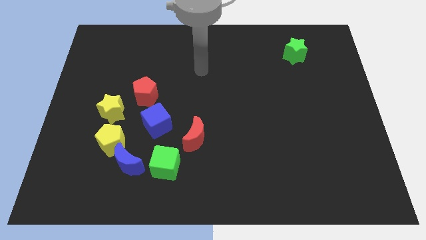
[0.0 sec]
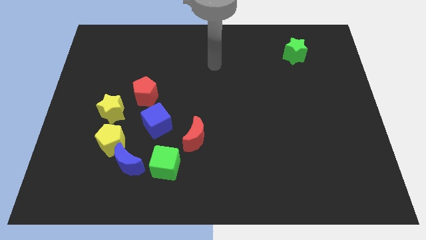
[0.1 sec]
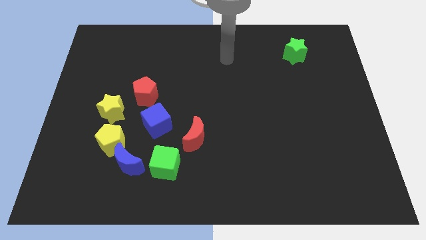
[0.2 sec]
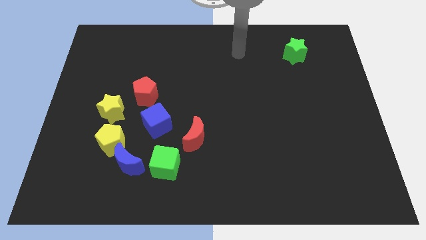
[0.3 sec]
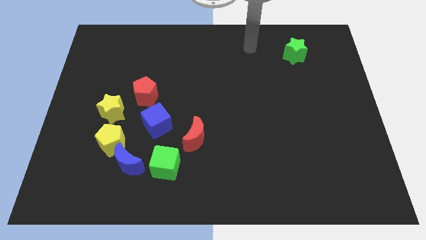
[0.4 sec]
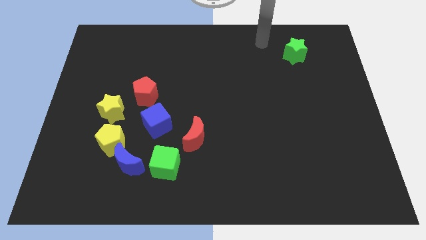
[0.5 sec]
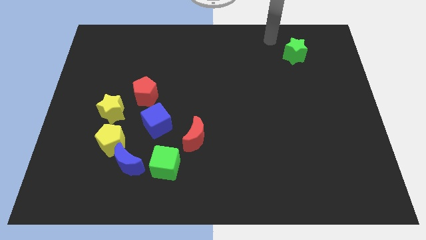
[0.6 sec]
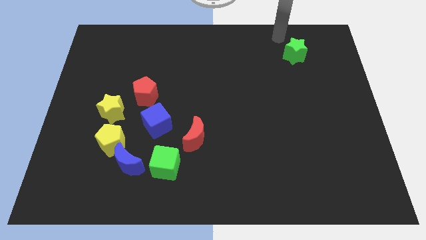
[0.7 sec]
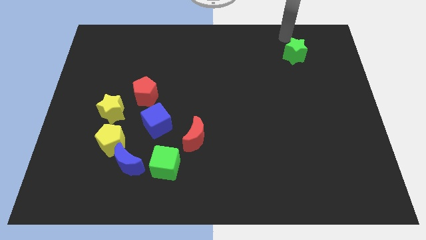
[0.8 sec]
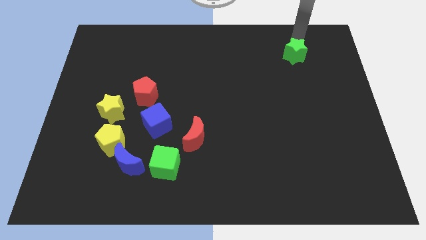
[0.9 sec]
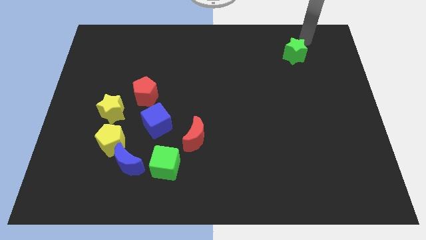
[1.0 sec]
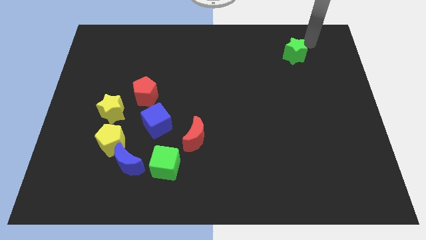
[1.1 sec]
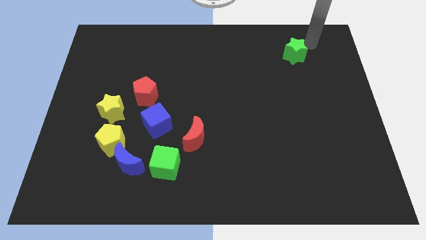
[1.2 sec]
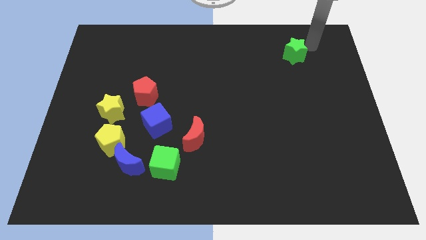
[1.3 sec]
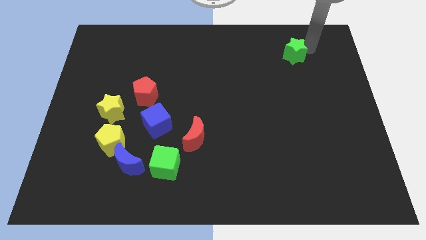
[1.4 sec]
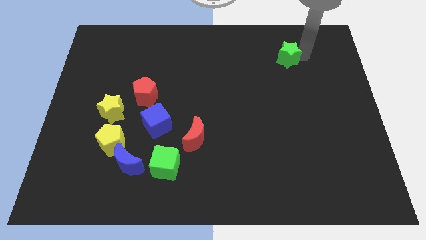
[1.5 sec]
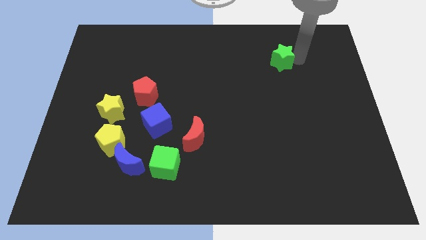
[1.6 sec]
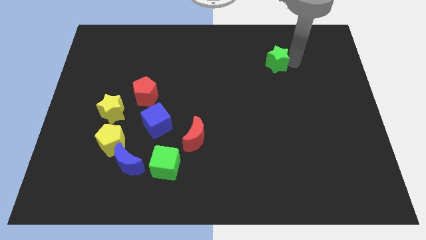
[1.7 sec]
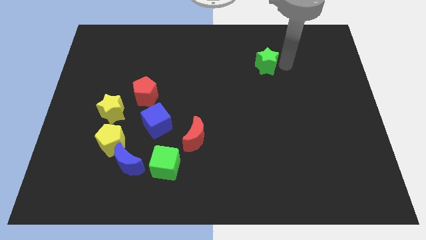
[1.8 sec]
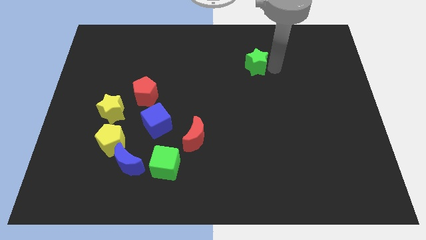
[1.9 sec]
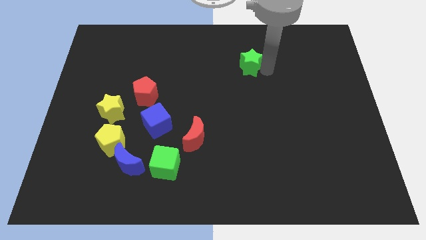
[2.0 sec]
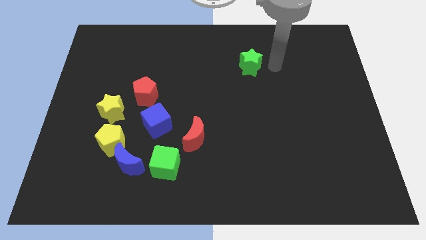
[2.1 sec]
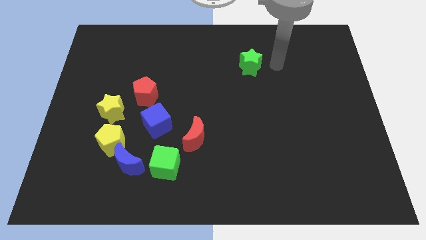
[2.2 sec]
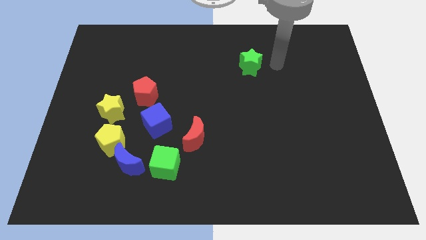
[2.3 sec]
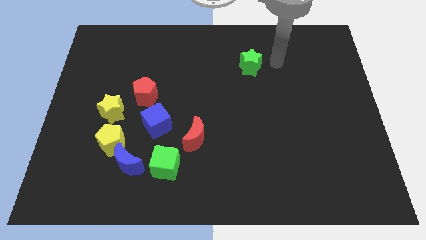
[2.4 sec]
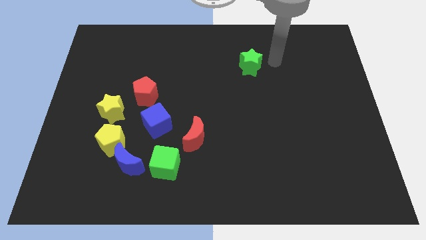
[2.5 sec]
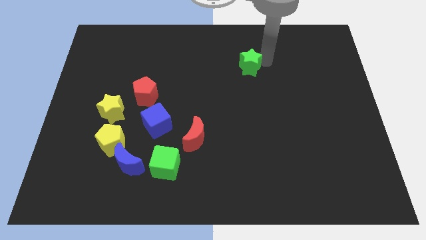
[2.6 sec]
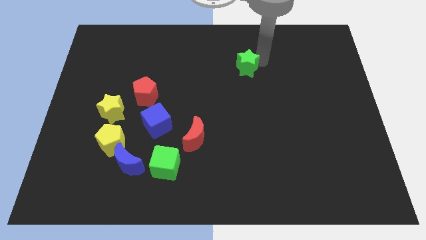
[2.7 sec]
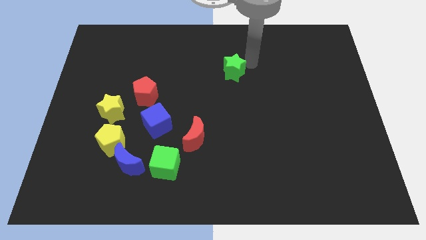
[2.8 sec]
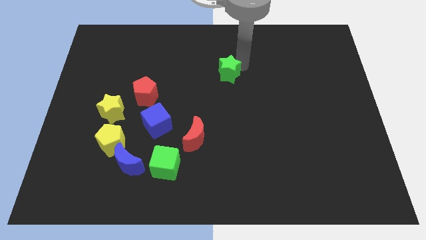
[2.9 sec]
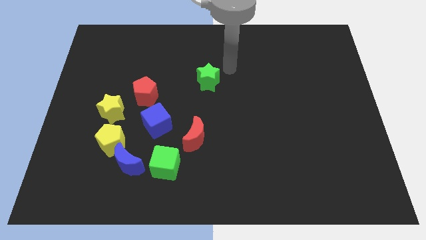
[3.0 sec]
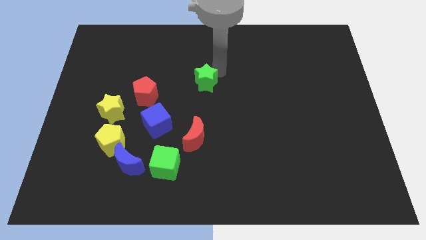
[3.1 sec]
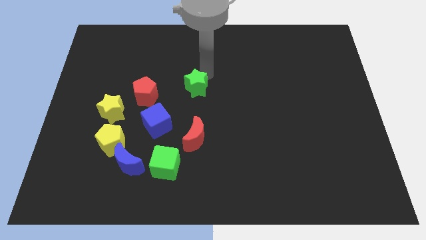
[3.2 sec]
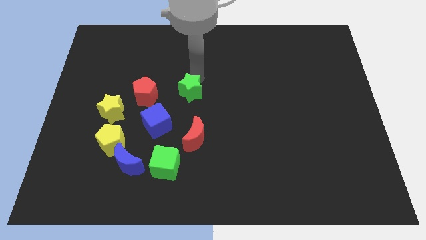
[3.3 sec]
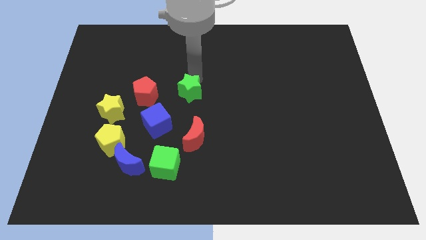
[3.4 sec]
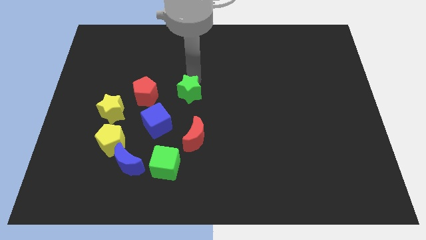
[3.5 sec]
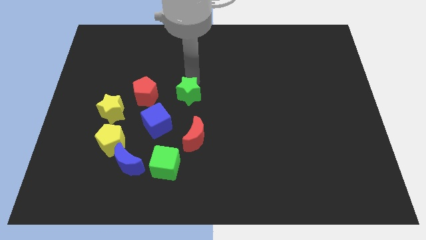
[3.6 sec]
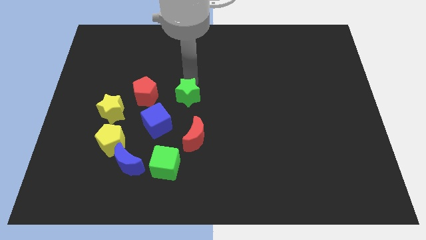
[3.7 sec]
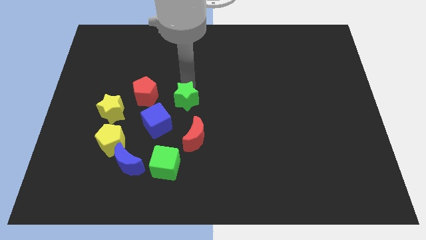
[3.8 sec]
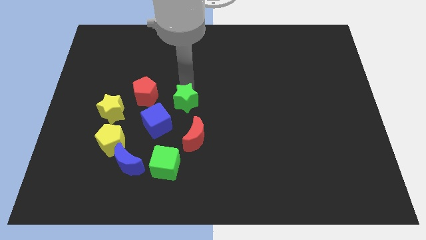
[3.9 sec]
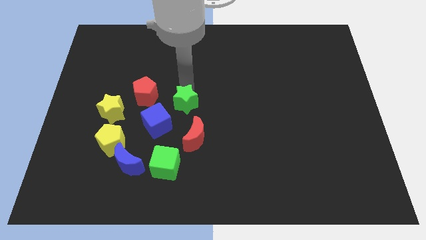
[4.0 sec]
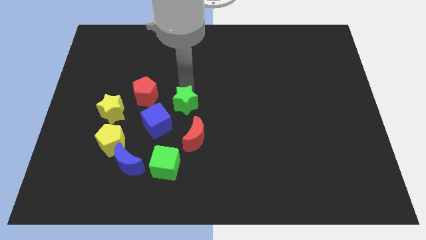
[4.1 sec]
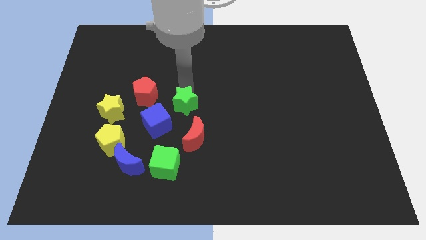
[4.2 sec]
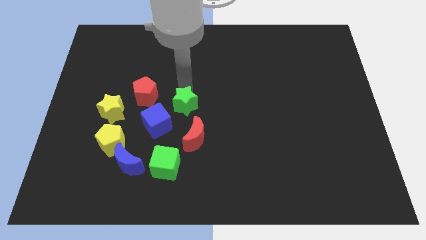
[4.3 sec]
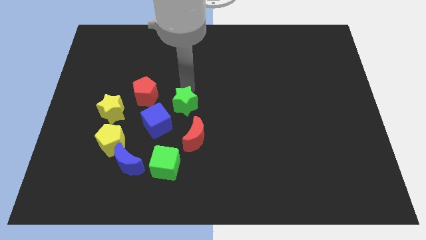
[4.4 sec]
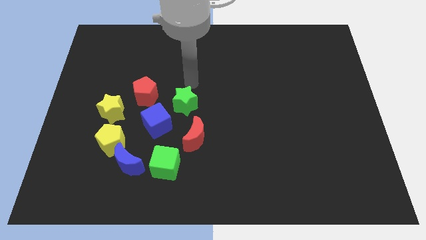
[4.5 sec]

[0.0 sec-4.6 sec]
move the green star to the group of blocks

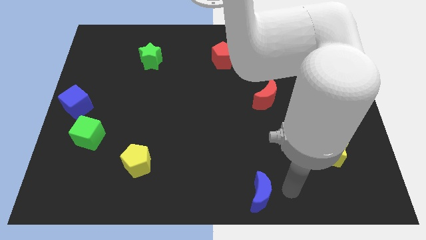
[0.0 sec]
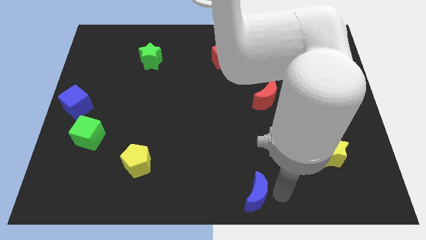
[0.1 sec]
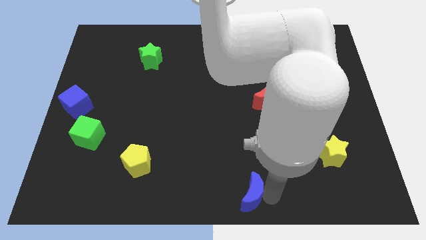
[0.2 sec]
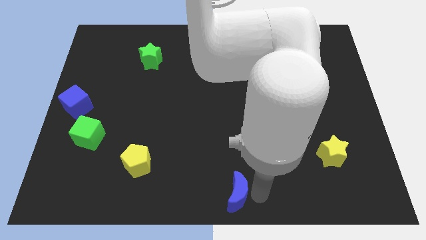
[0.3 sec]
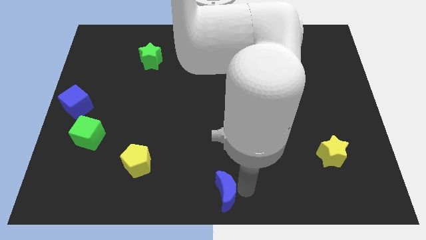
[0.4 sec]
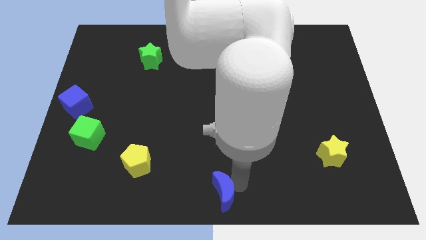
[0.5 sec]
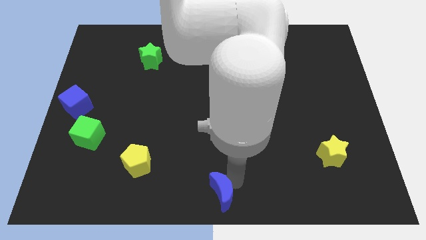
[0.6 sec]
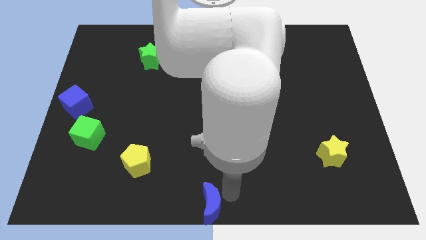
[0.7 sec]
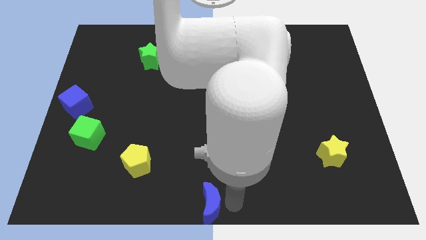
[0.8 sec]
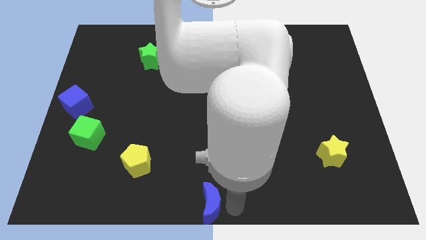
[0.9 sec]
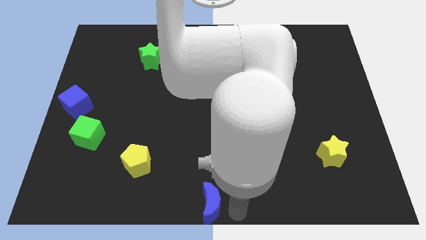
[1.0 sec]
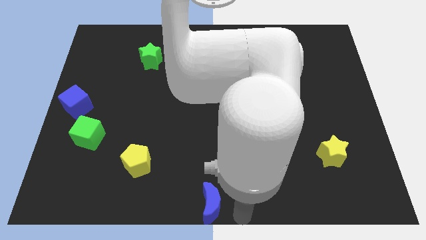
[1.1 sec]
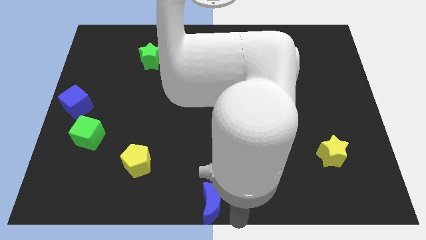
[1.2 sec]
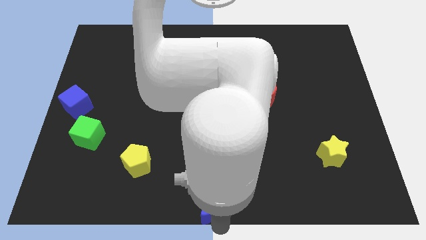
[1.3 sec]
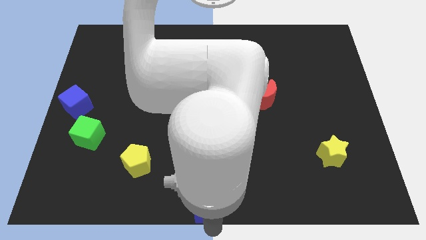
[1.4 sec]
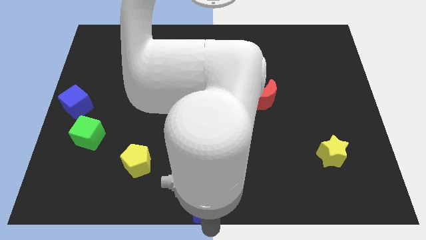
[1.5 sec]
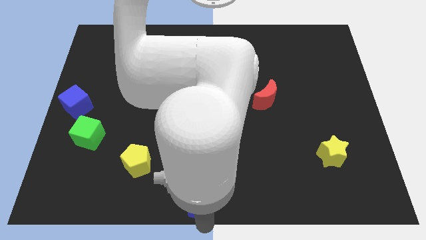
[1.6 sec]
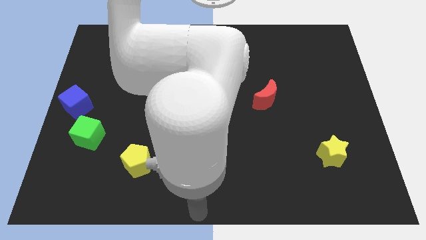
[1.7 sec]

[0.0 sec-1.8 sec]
place the blue crescent at the bottom center of the board

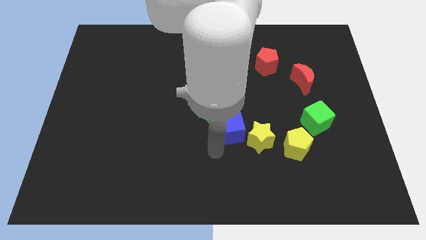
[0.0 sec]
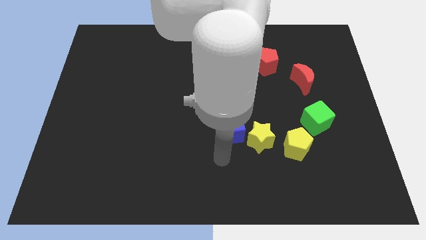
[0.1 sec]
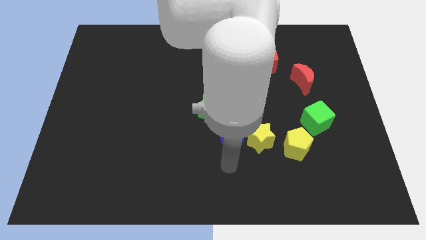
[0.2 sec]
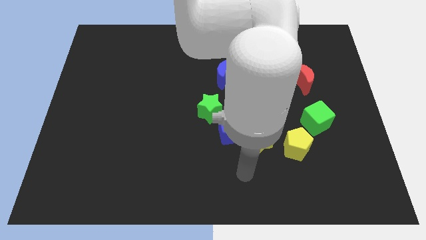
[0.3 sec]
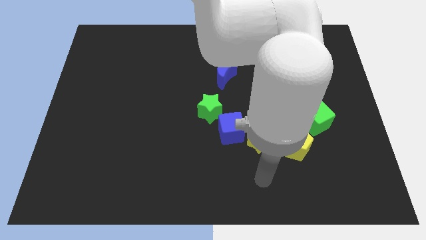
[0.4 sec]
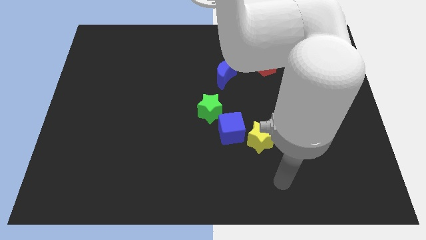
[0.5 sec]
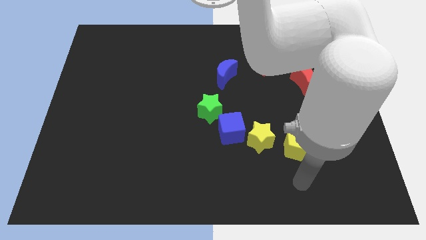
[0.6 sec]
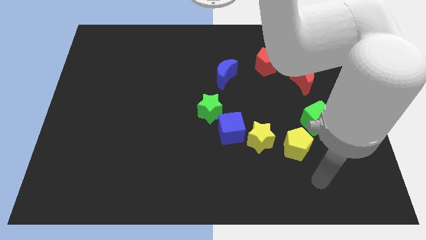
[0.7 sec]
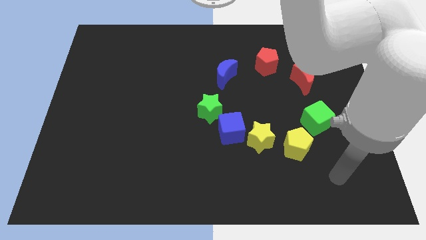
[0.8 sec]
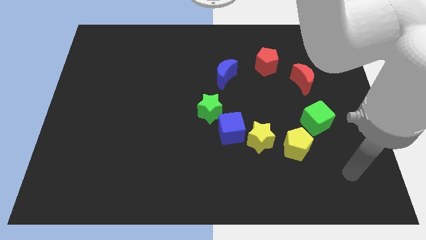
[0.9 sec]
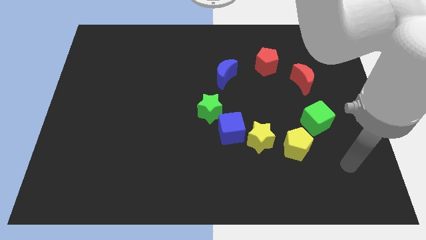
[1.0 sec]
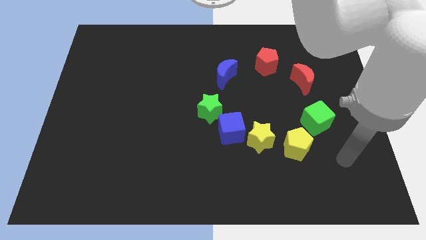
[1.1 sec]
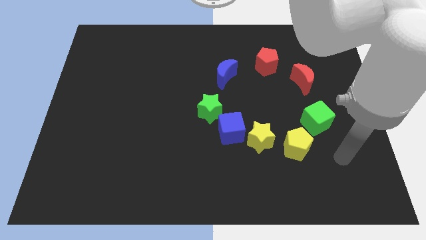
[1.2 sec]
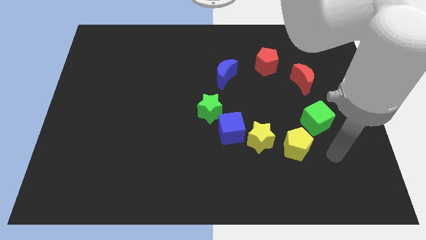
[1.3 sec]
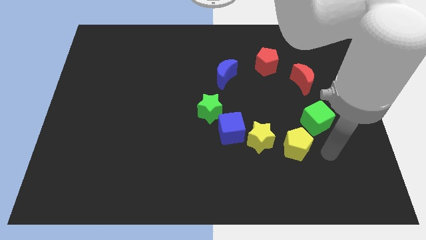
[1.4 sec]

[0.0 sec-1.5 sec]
move your hand towards the yellow pentagon

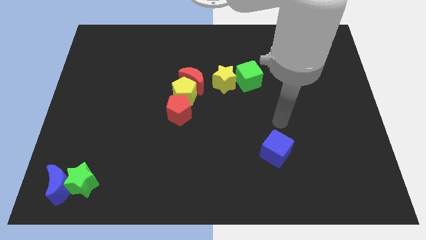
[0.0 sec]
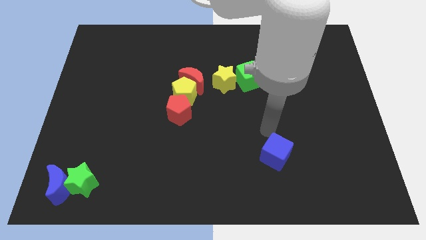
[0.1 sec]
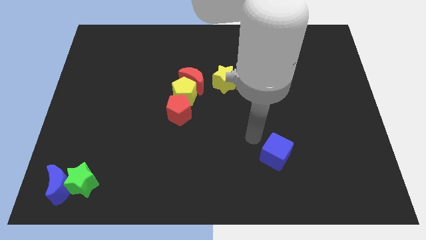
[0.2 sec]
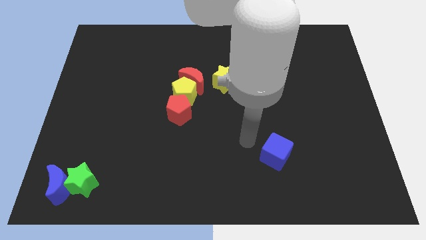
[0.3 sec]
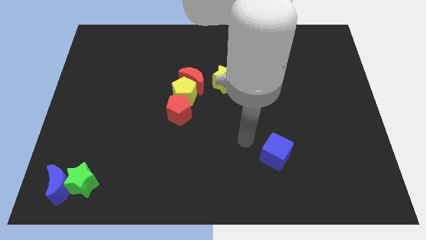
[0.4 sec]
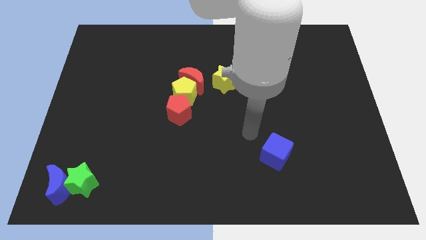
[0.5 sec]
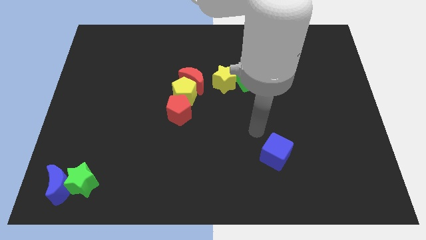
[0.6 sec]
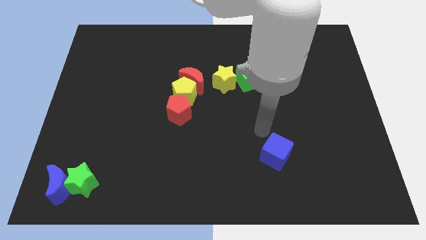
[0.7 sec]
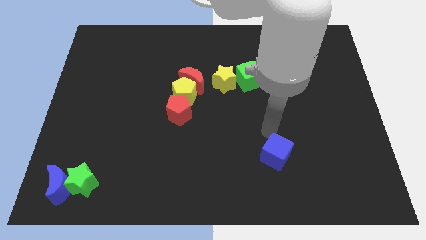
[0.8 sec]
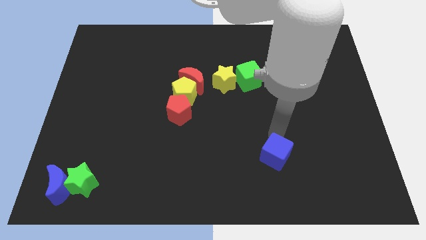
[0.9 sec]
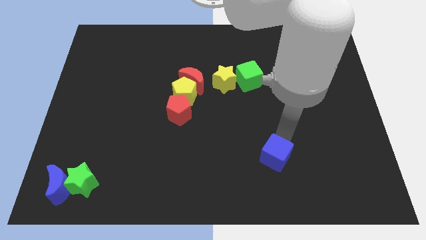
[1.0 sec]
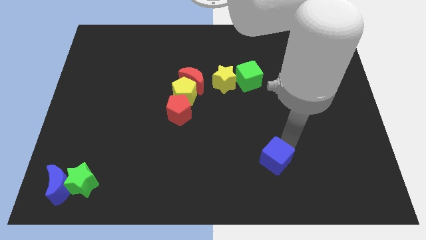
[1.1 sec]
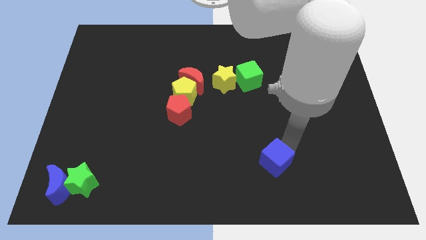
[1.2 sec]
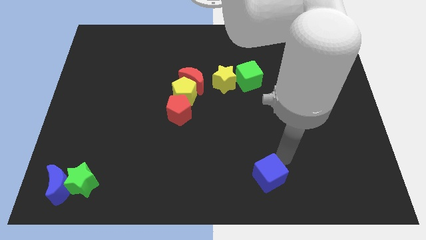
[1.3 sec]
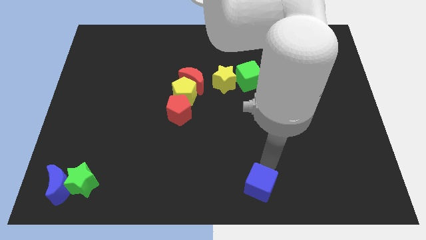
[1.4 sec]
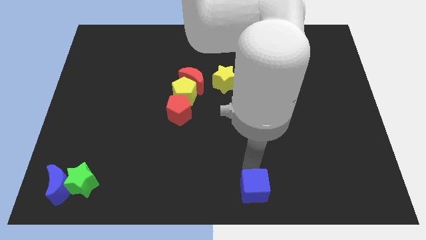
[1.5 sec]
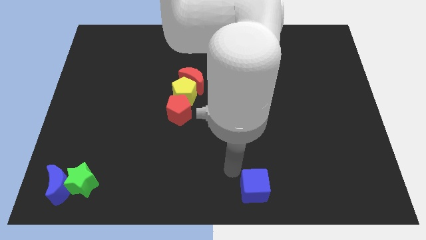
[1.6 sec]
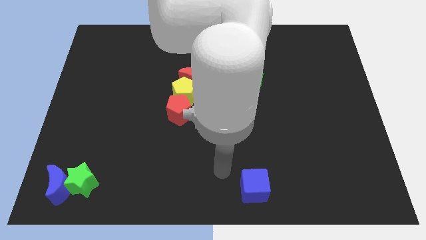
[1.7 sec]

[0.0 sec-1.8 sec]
push the blue cube towards the bottom center of the board
